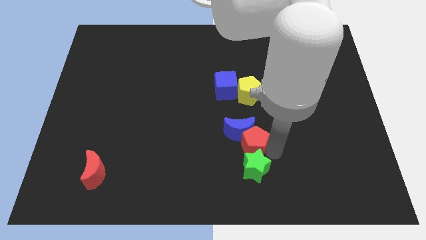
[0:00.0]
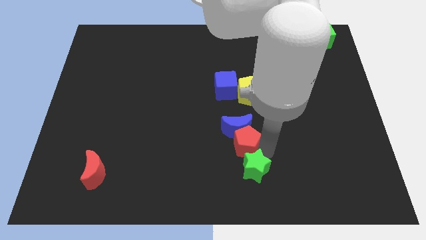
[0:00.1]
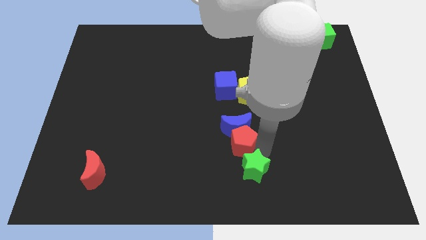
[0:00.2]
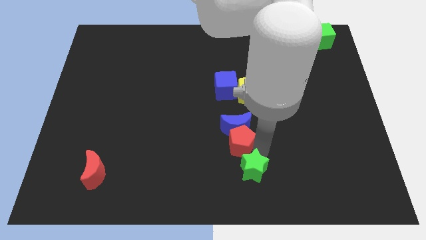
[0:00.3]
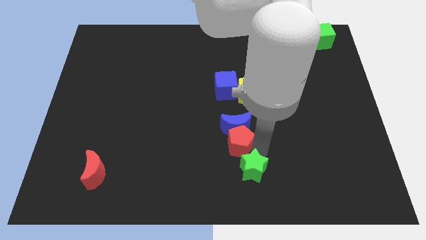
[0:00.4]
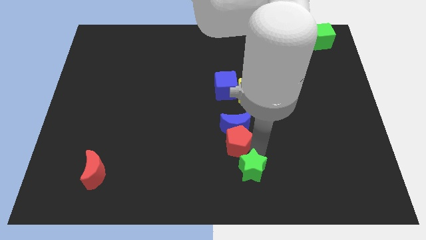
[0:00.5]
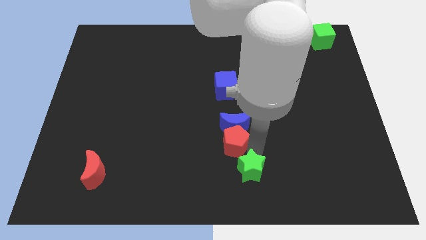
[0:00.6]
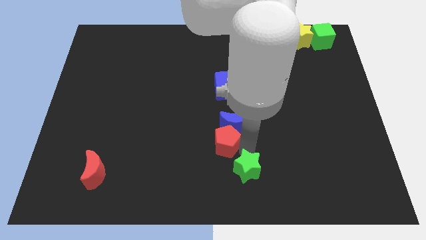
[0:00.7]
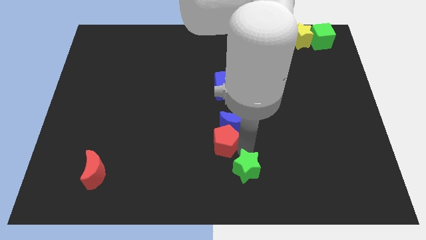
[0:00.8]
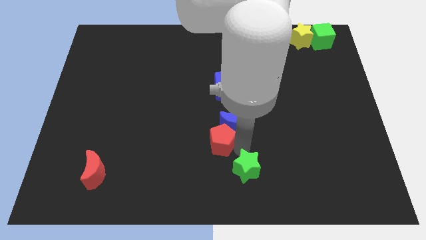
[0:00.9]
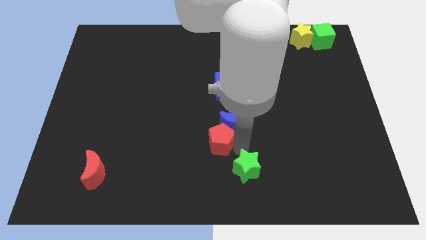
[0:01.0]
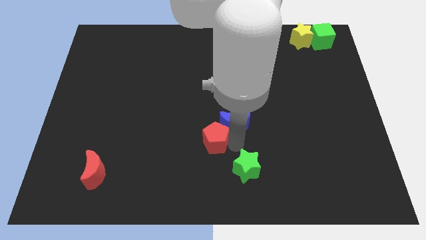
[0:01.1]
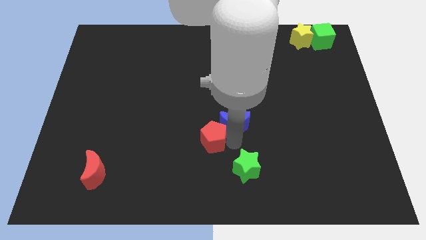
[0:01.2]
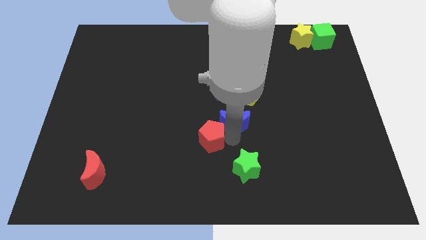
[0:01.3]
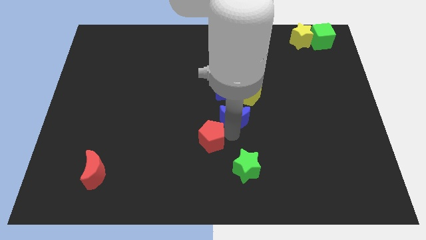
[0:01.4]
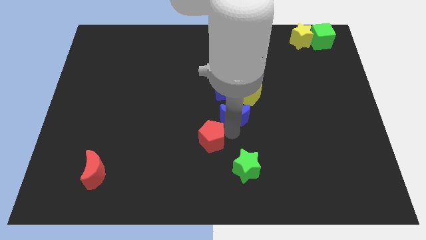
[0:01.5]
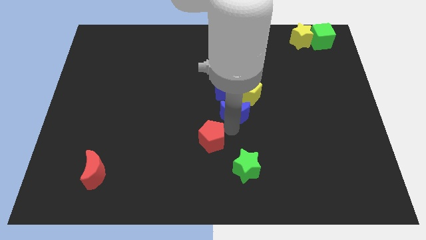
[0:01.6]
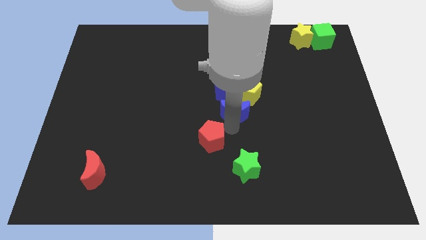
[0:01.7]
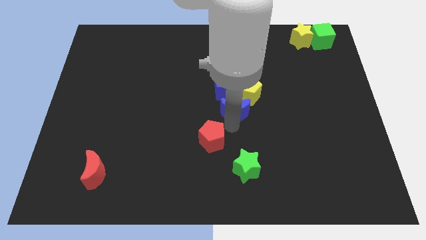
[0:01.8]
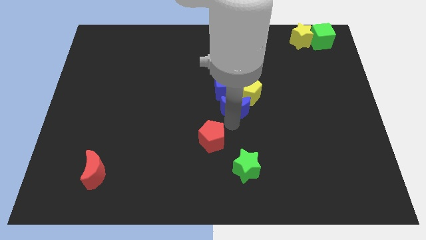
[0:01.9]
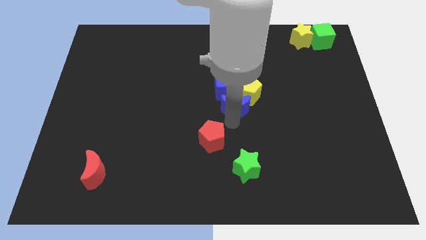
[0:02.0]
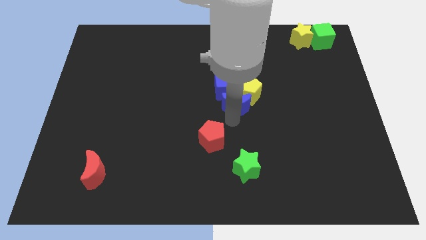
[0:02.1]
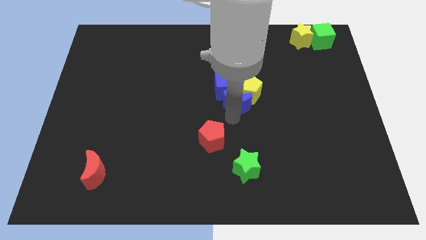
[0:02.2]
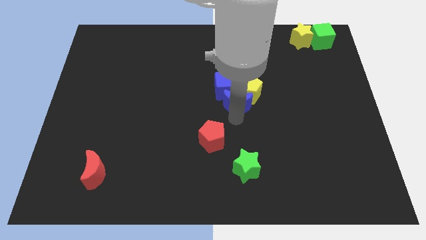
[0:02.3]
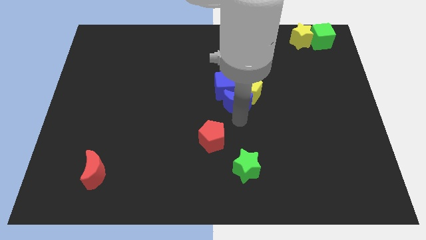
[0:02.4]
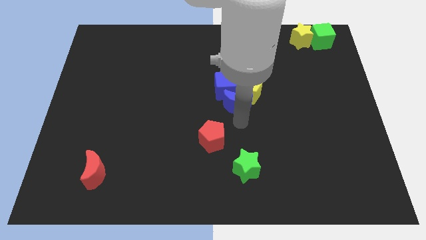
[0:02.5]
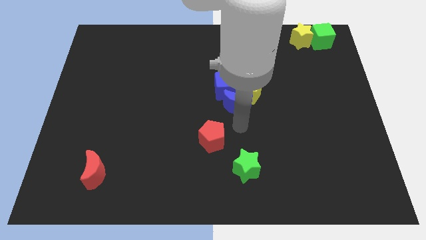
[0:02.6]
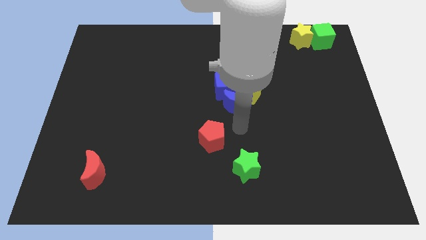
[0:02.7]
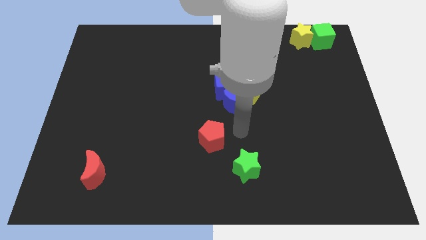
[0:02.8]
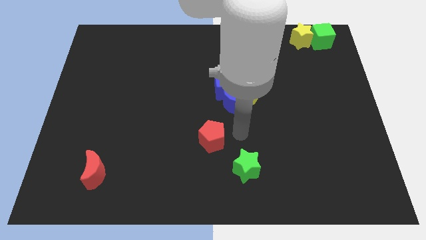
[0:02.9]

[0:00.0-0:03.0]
push blue crescent towards blue cube and yellow pentagon

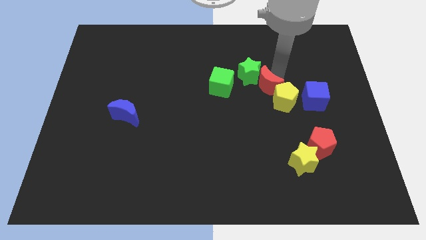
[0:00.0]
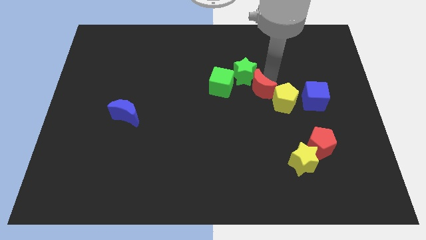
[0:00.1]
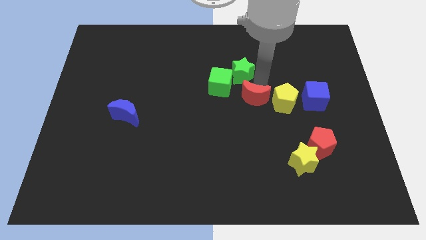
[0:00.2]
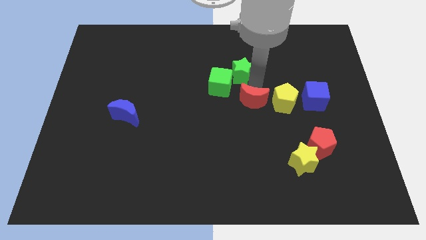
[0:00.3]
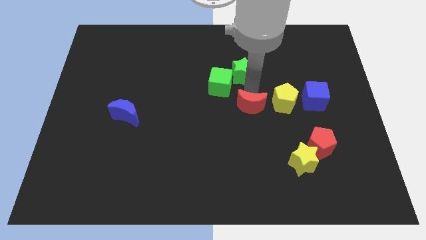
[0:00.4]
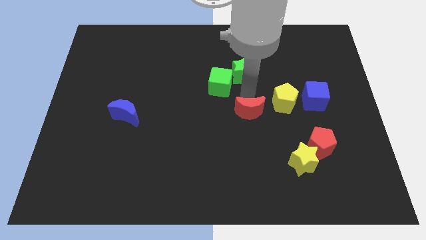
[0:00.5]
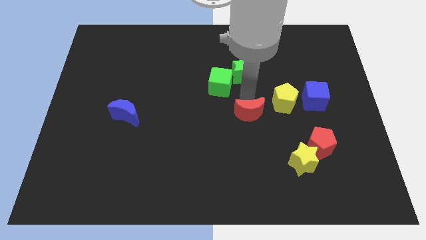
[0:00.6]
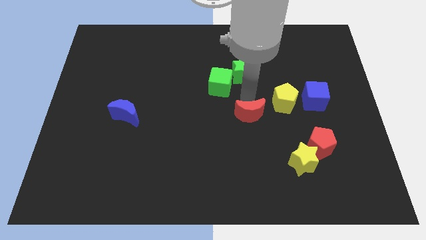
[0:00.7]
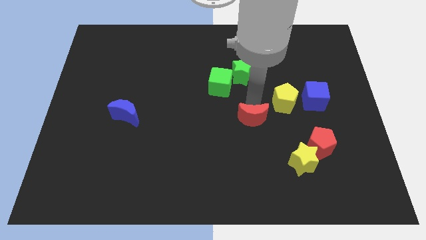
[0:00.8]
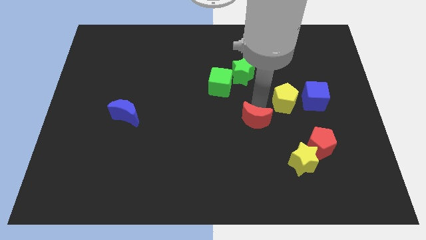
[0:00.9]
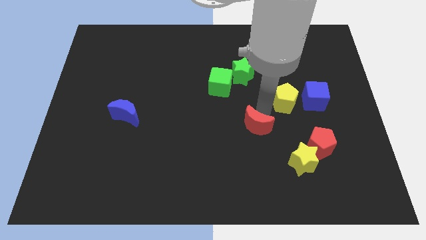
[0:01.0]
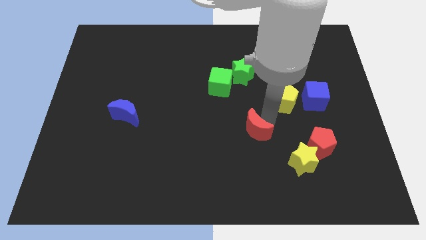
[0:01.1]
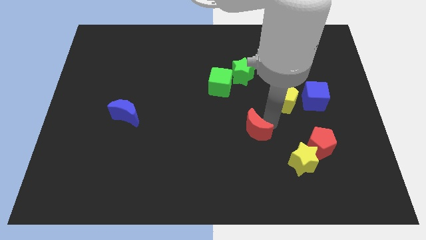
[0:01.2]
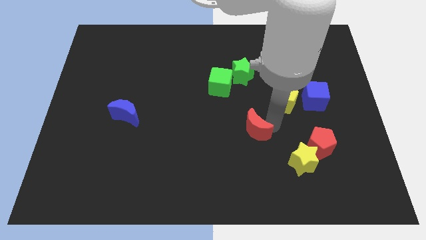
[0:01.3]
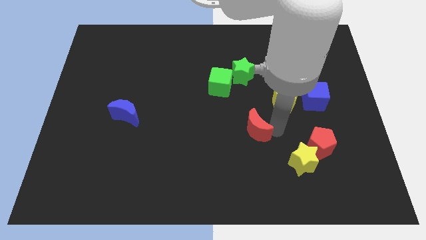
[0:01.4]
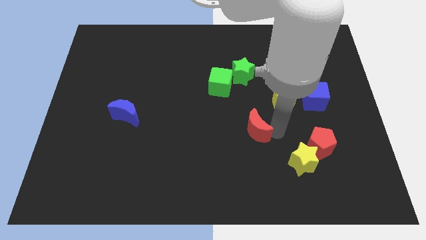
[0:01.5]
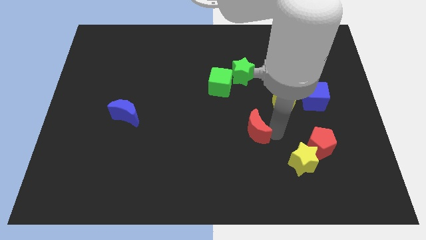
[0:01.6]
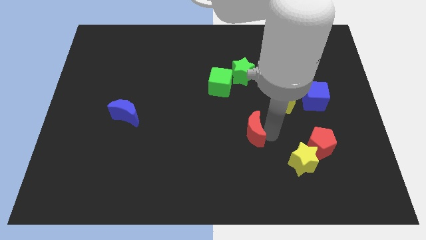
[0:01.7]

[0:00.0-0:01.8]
separate the red crescent from the yellow pentagon

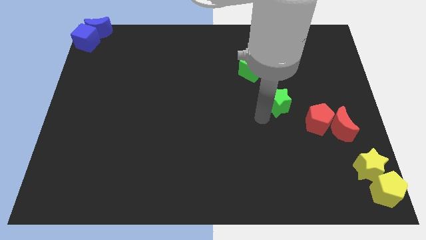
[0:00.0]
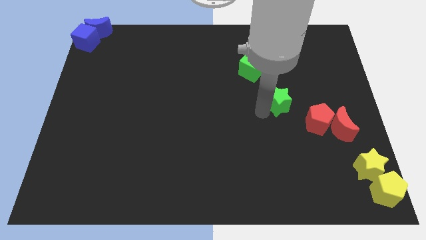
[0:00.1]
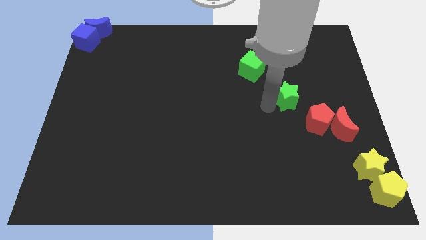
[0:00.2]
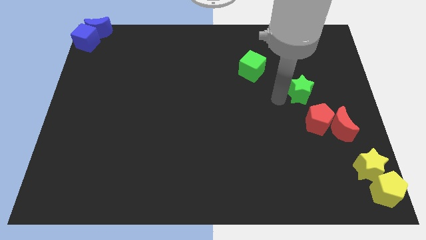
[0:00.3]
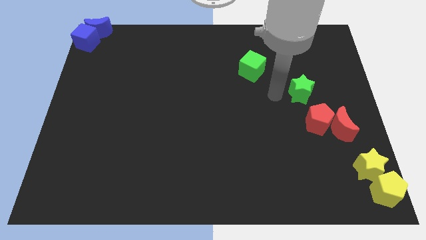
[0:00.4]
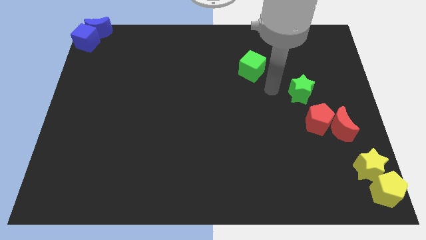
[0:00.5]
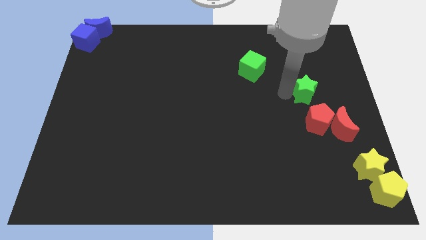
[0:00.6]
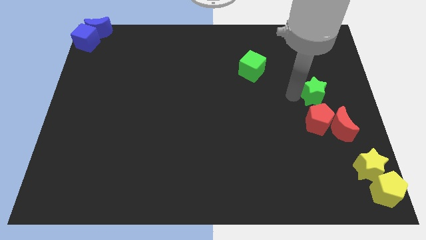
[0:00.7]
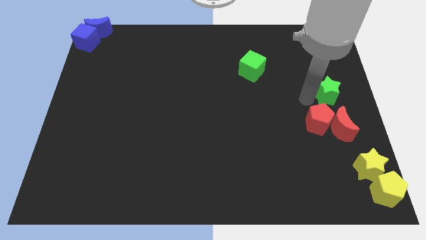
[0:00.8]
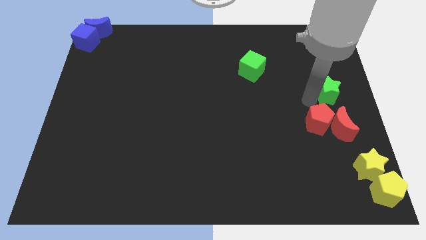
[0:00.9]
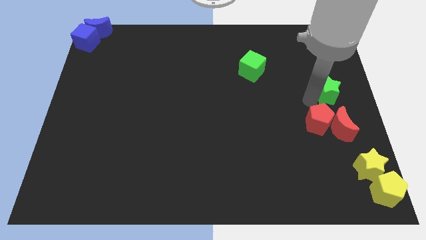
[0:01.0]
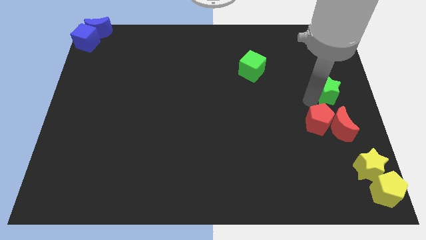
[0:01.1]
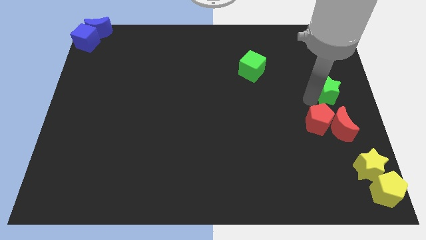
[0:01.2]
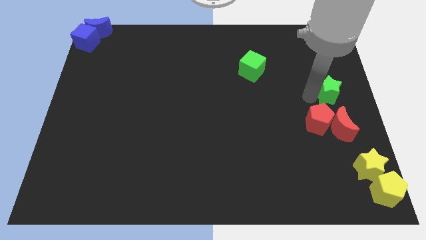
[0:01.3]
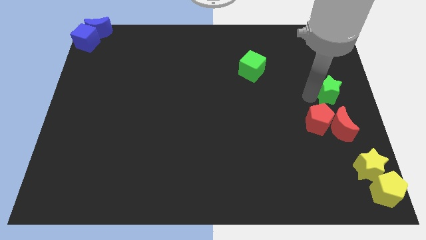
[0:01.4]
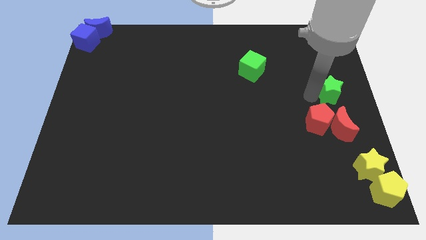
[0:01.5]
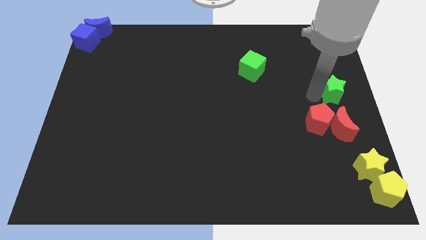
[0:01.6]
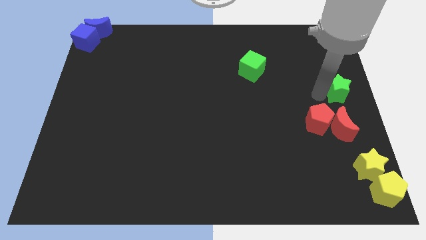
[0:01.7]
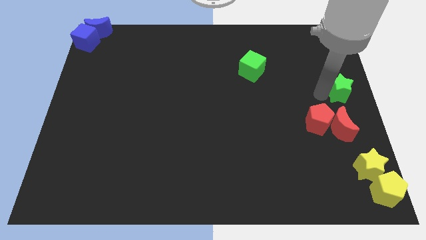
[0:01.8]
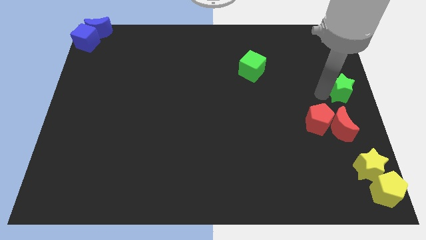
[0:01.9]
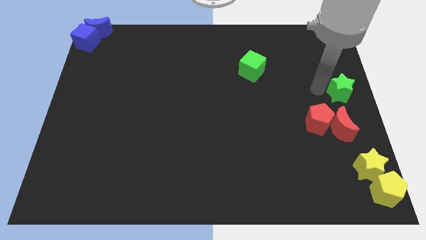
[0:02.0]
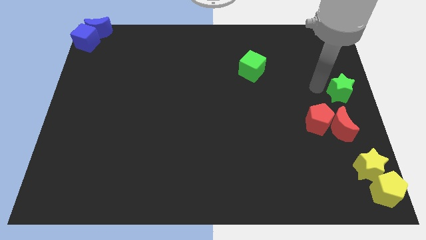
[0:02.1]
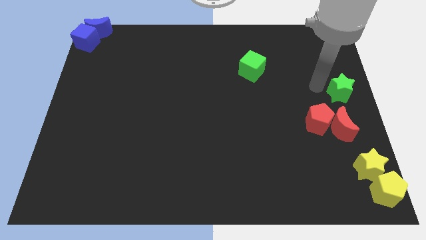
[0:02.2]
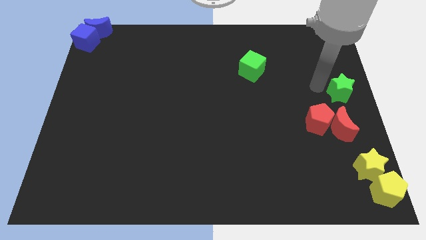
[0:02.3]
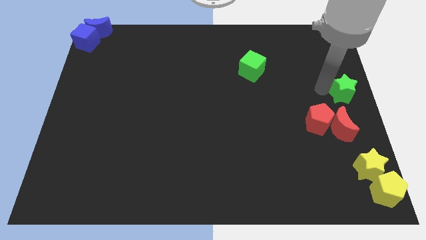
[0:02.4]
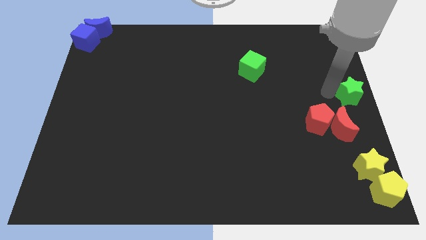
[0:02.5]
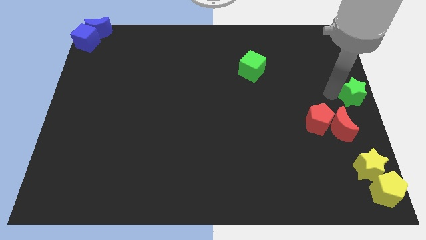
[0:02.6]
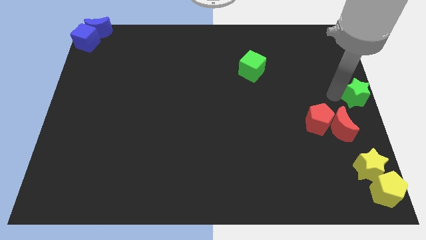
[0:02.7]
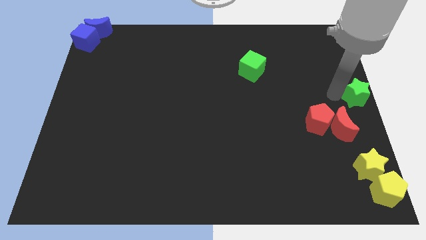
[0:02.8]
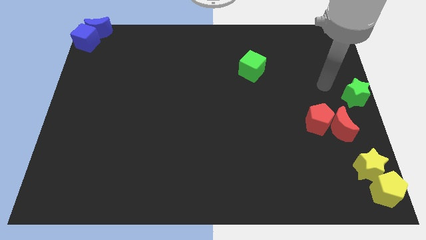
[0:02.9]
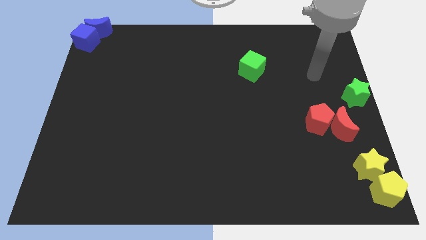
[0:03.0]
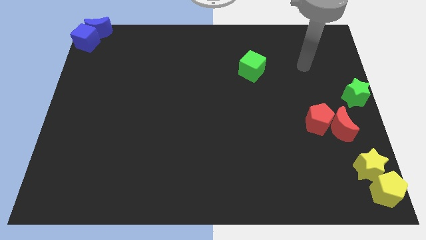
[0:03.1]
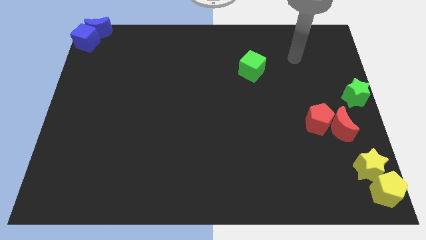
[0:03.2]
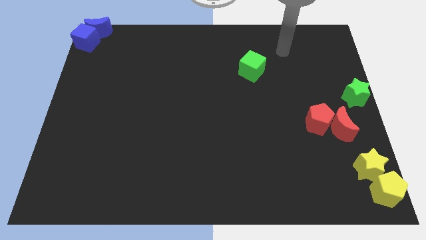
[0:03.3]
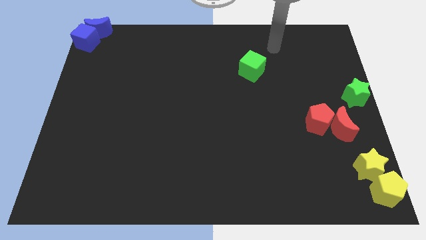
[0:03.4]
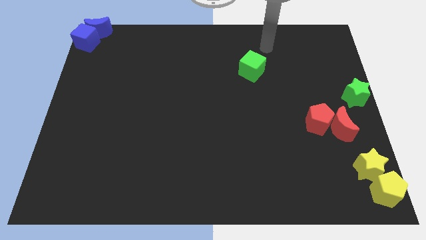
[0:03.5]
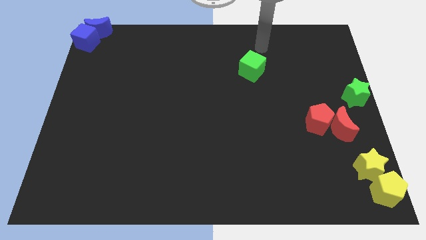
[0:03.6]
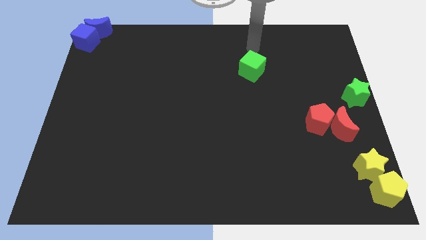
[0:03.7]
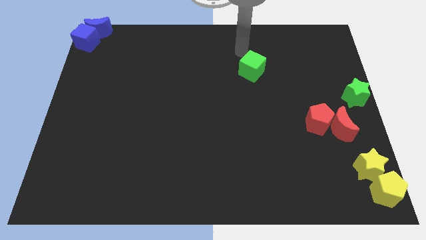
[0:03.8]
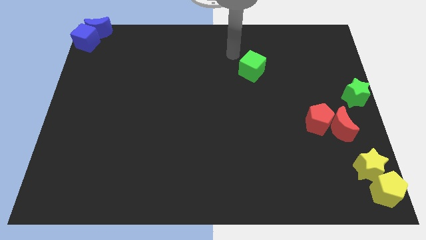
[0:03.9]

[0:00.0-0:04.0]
place the green star at the center right corner of the board

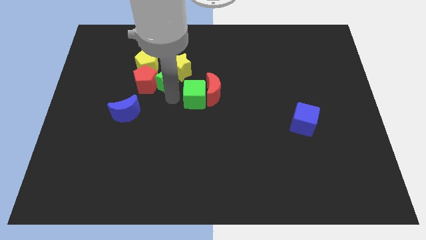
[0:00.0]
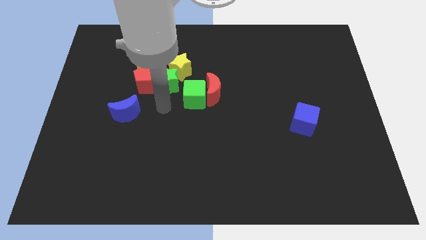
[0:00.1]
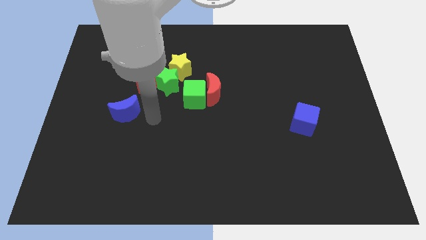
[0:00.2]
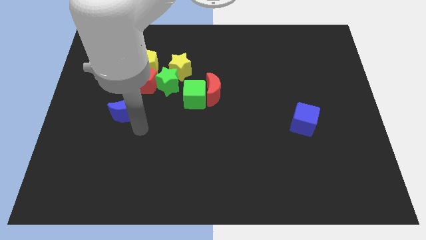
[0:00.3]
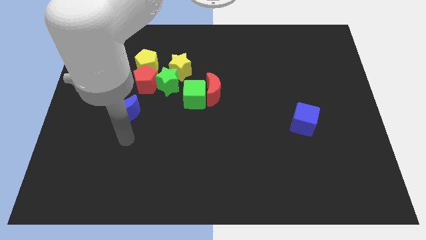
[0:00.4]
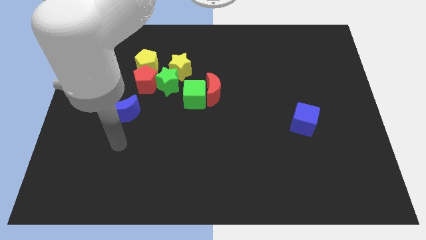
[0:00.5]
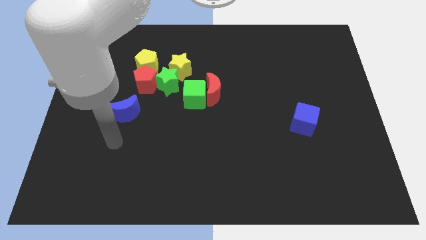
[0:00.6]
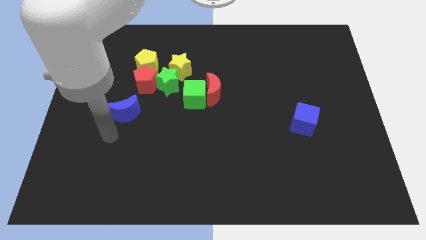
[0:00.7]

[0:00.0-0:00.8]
move your arm away from the green star
